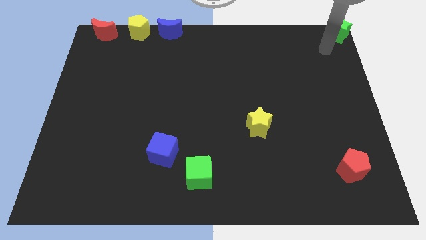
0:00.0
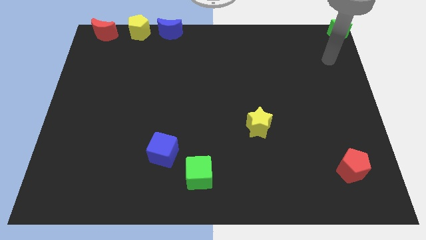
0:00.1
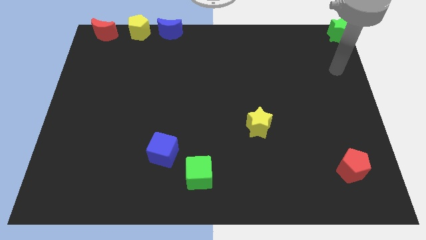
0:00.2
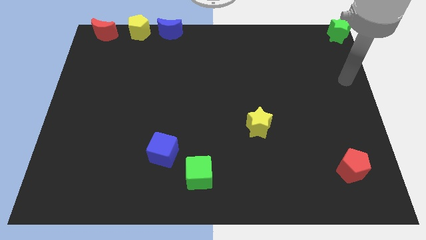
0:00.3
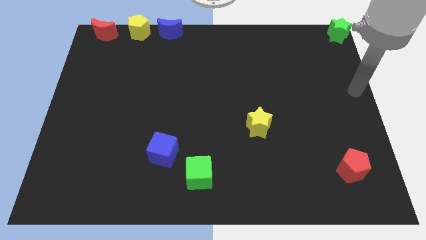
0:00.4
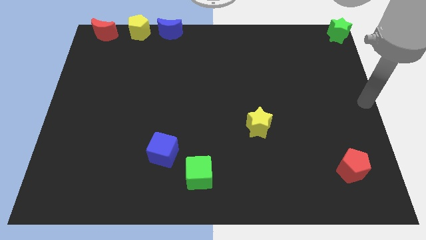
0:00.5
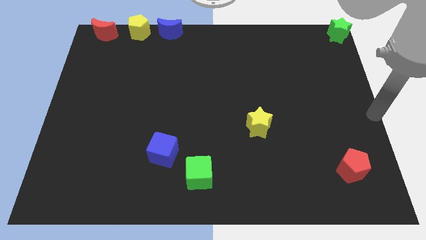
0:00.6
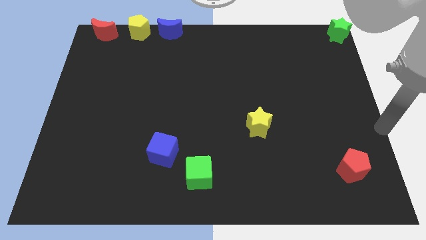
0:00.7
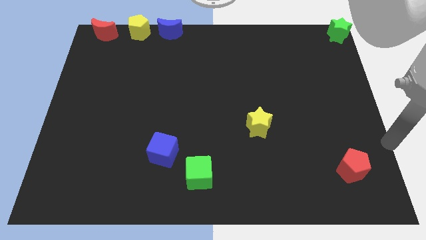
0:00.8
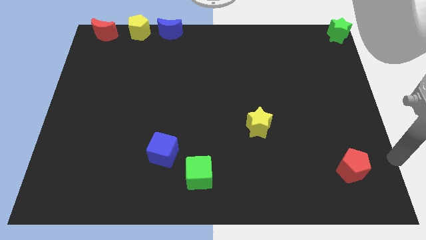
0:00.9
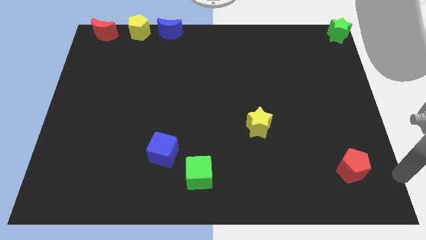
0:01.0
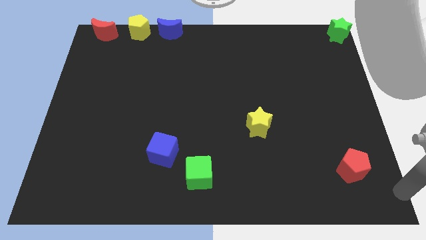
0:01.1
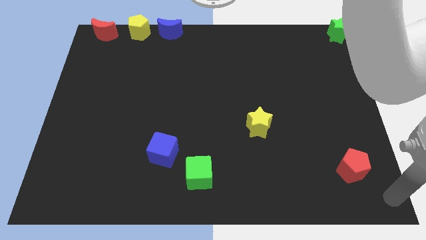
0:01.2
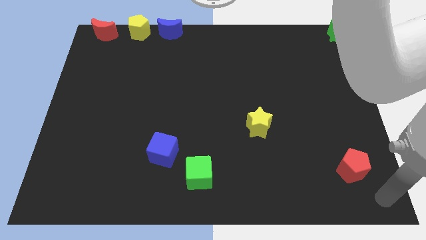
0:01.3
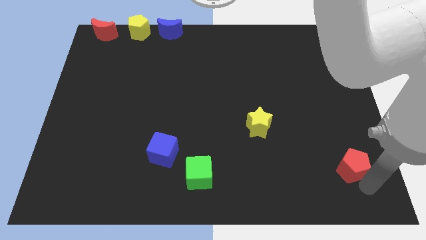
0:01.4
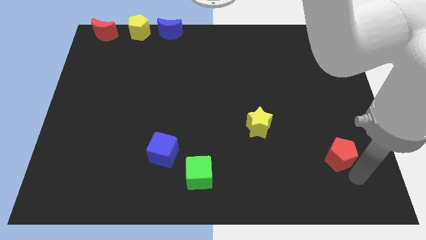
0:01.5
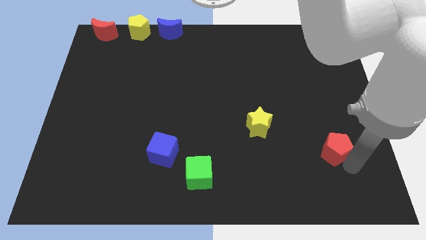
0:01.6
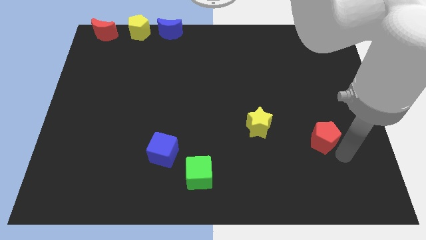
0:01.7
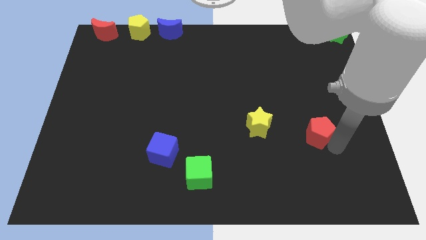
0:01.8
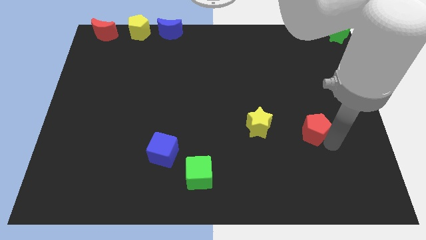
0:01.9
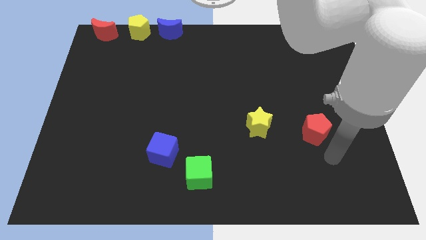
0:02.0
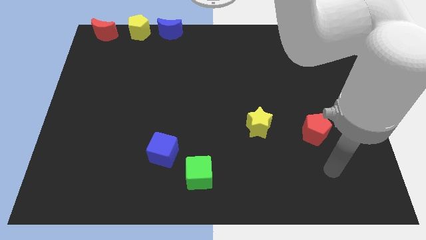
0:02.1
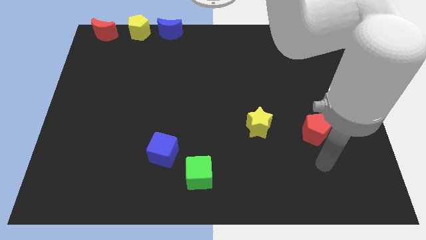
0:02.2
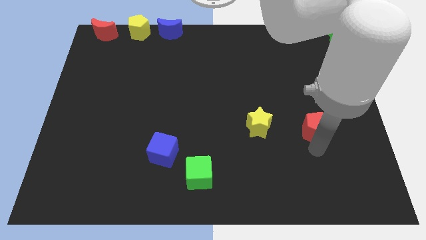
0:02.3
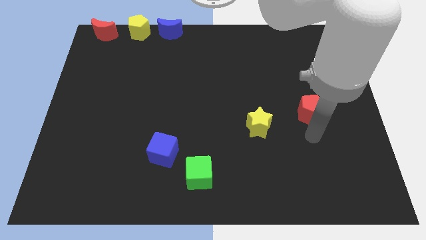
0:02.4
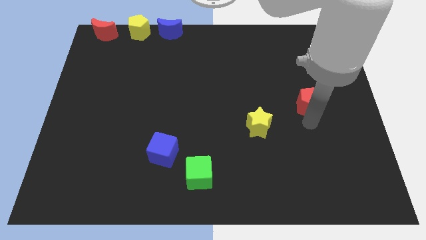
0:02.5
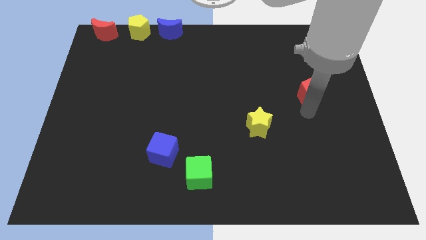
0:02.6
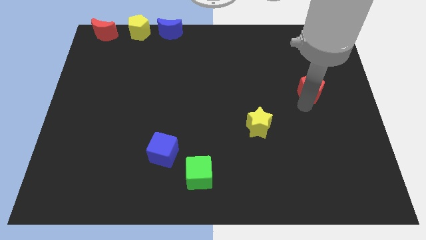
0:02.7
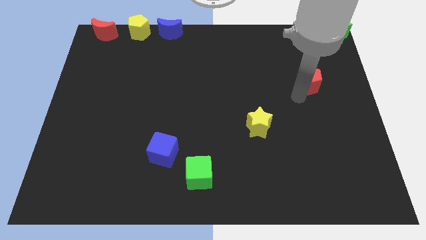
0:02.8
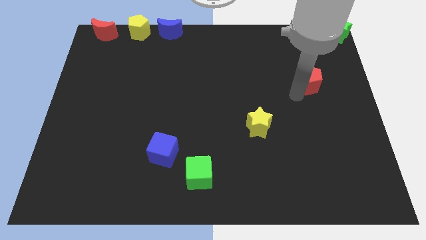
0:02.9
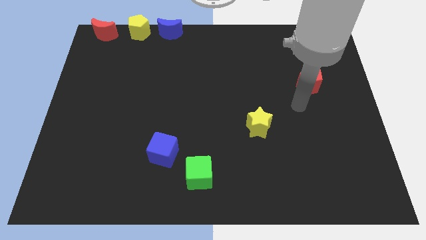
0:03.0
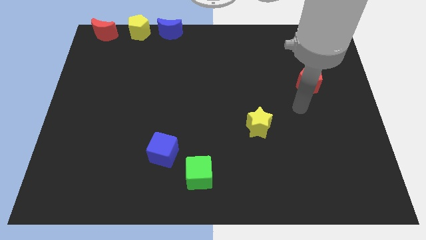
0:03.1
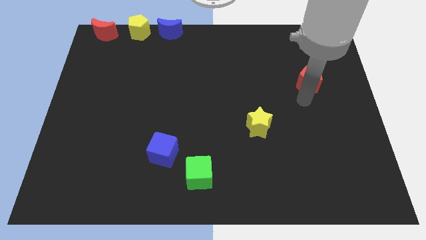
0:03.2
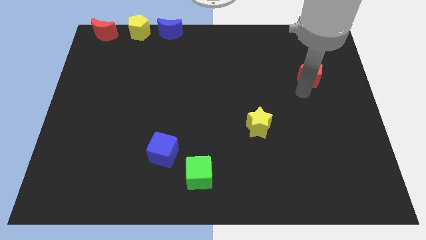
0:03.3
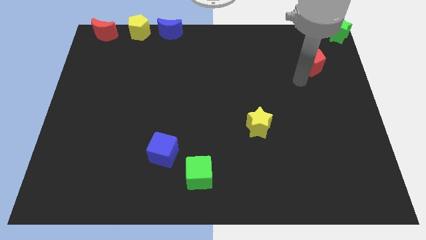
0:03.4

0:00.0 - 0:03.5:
move the red pentagon diagonally in between the green star and yellow star

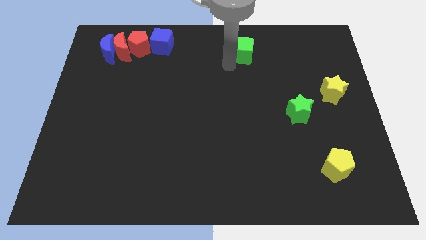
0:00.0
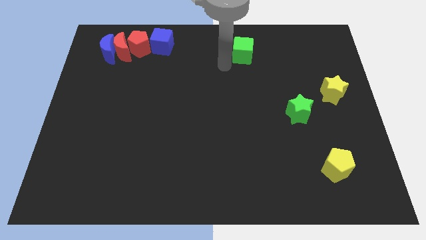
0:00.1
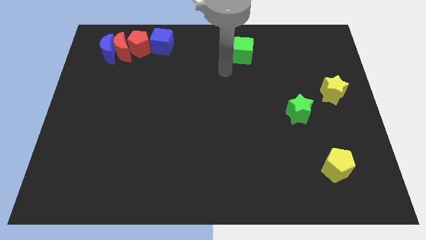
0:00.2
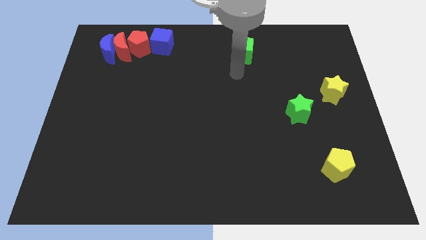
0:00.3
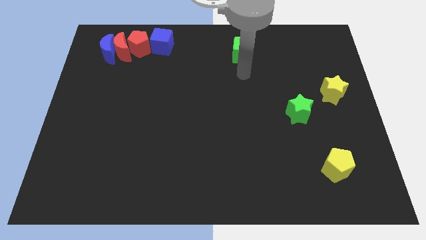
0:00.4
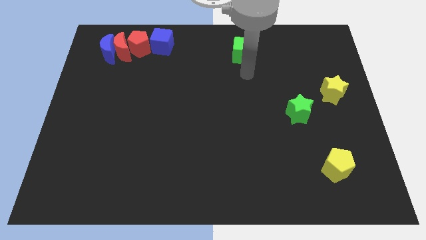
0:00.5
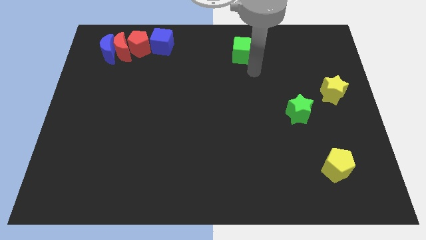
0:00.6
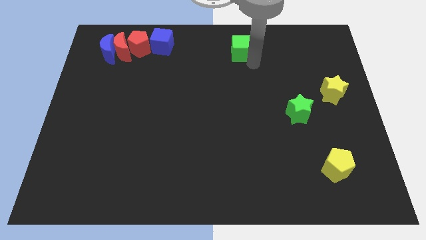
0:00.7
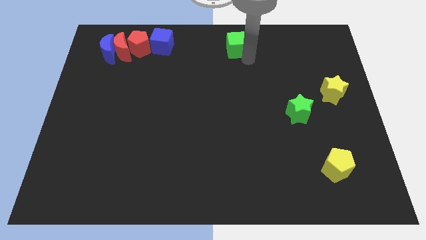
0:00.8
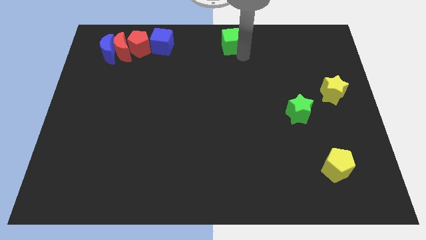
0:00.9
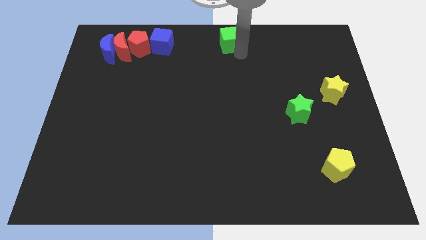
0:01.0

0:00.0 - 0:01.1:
move green cube to the center top

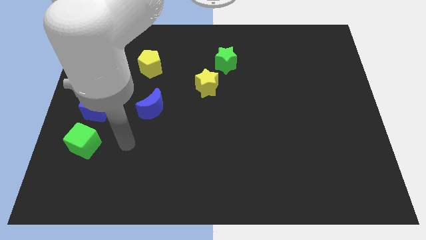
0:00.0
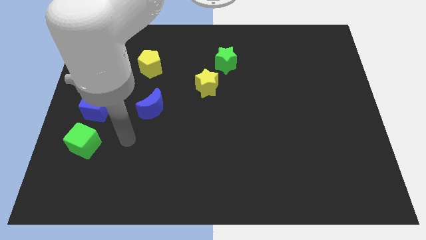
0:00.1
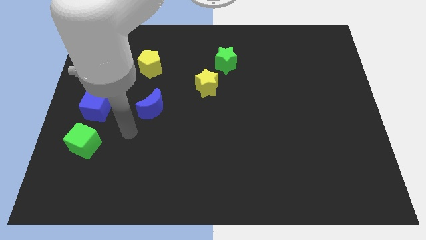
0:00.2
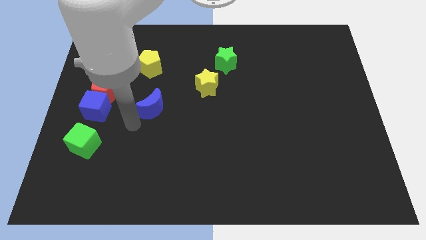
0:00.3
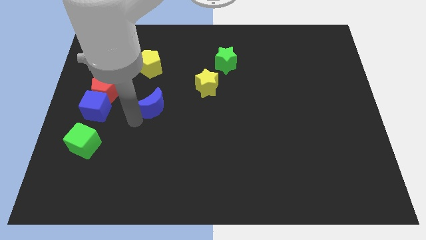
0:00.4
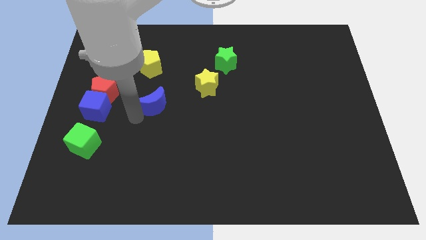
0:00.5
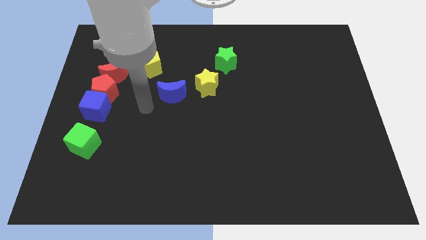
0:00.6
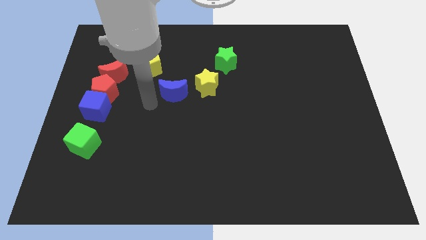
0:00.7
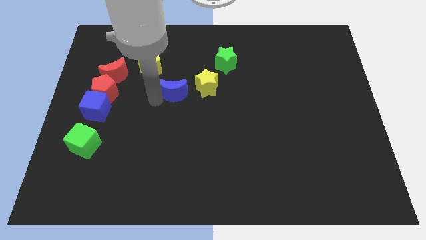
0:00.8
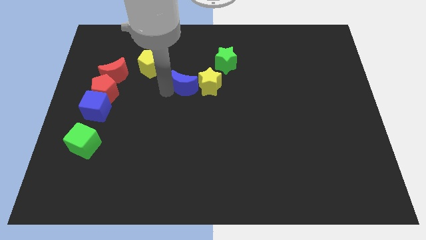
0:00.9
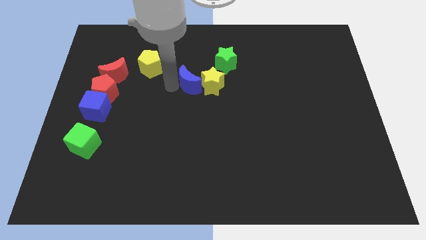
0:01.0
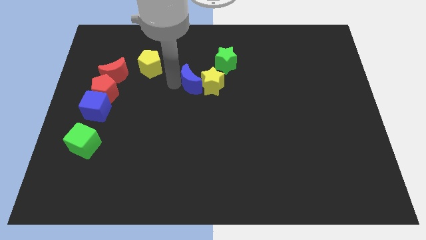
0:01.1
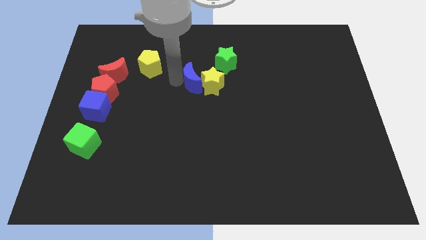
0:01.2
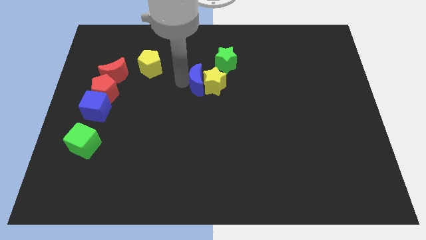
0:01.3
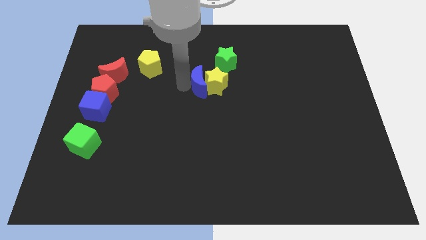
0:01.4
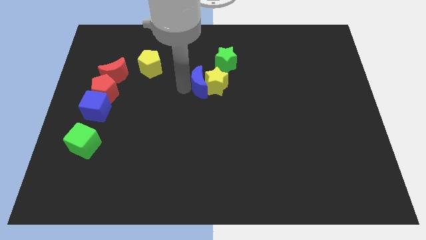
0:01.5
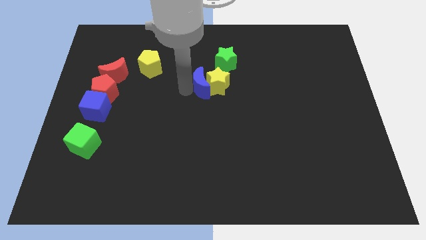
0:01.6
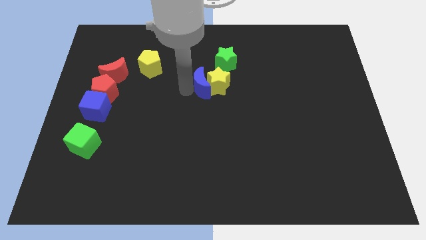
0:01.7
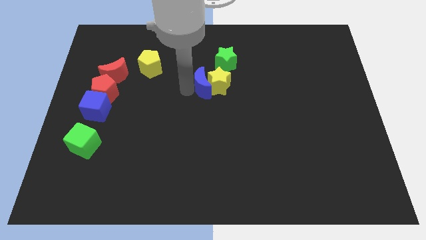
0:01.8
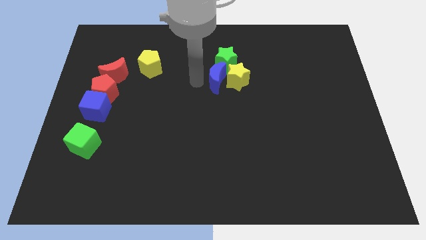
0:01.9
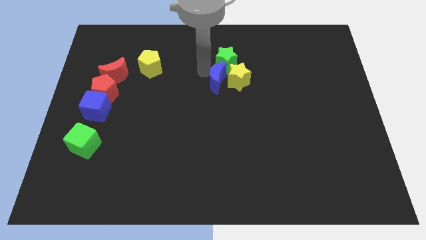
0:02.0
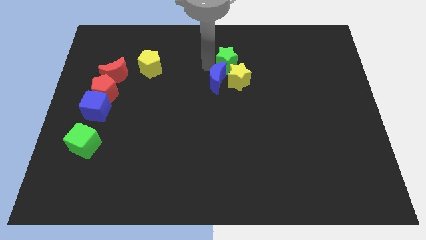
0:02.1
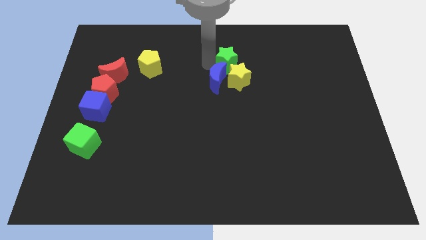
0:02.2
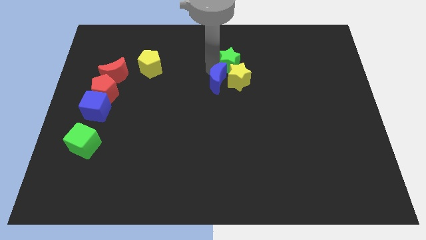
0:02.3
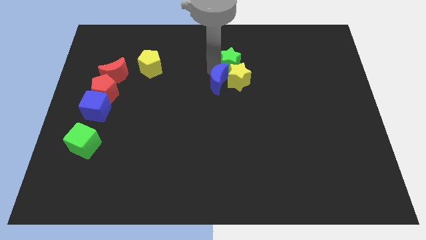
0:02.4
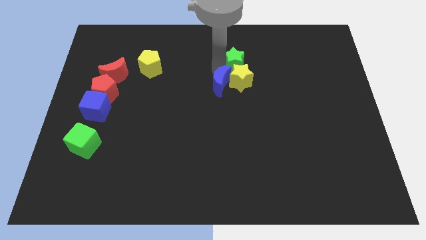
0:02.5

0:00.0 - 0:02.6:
push the blue crescent along with the yellow star towards the green star

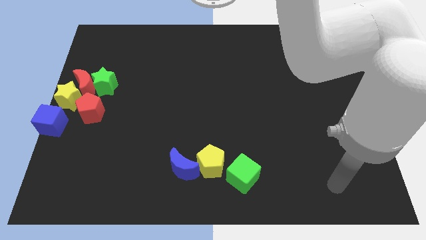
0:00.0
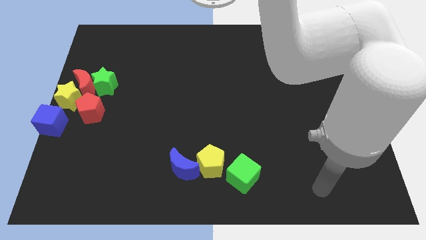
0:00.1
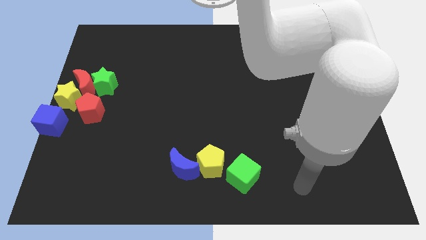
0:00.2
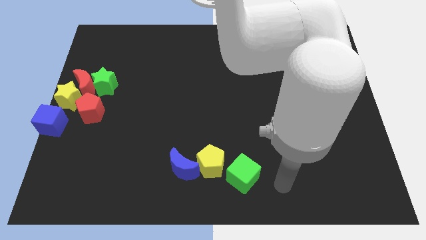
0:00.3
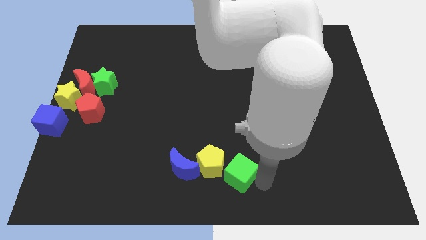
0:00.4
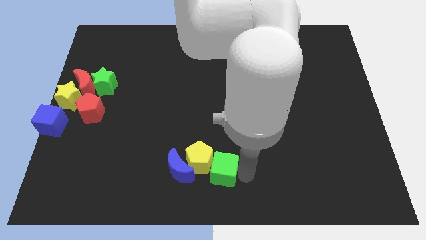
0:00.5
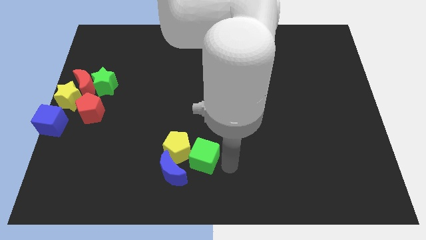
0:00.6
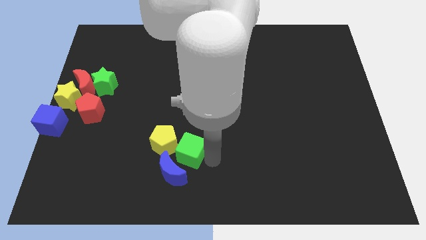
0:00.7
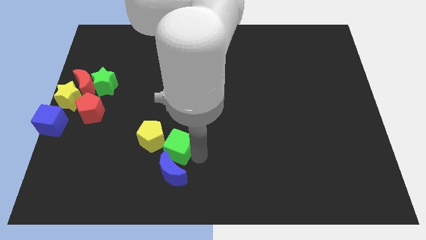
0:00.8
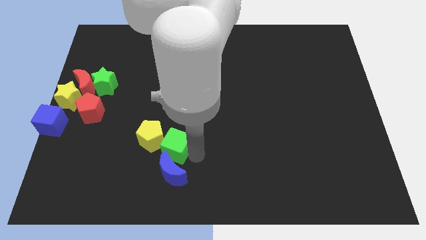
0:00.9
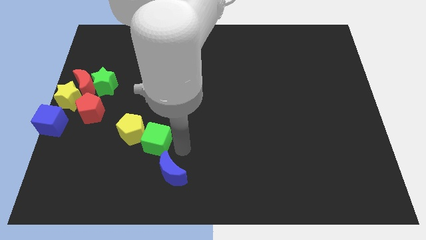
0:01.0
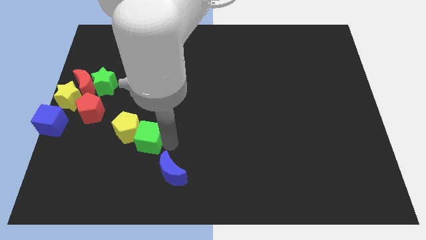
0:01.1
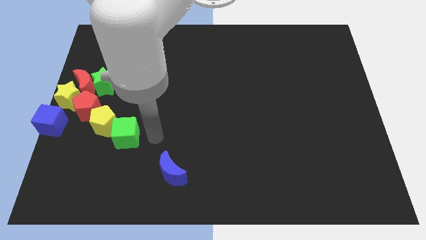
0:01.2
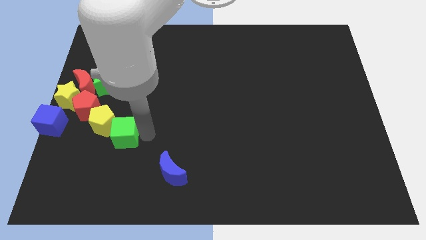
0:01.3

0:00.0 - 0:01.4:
move the green cube and yellow pentagon into the right side of the red pentagon

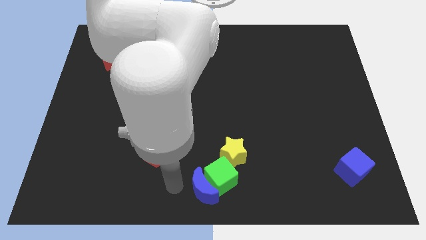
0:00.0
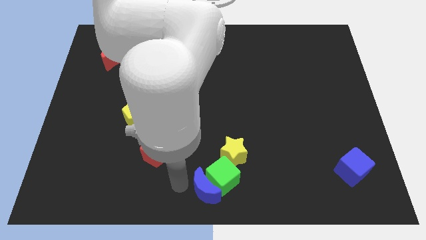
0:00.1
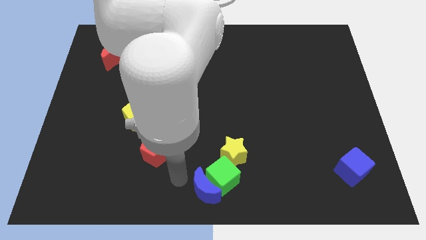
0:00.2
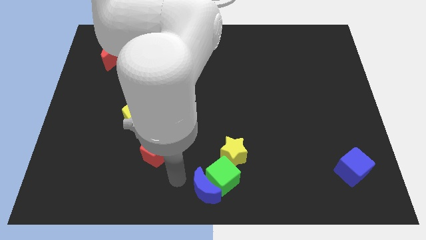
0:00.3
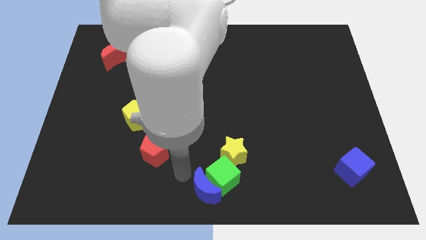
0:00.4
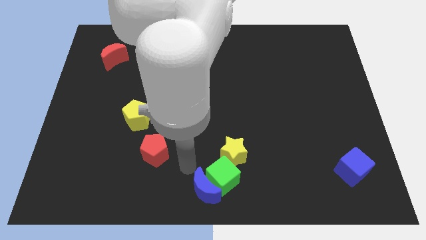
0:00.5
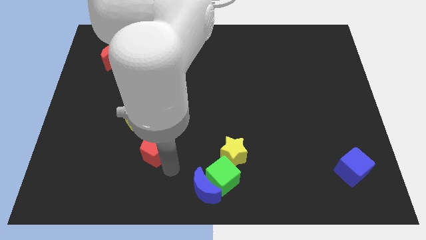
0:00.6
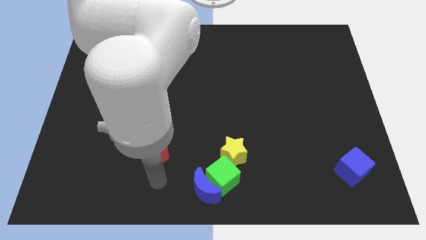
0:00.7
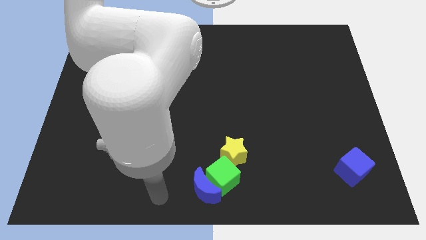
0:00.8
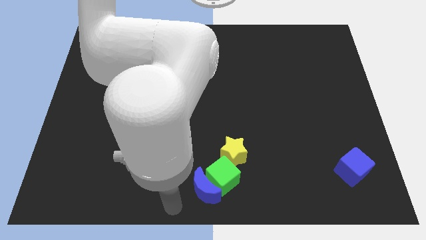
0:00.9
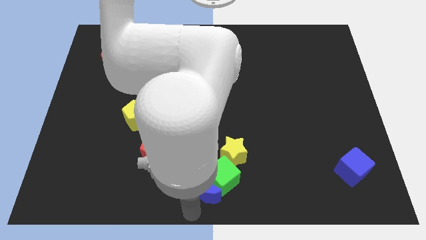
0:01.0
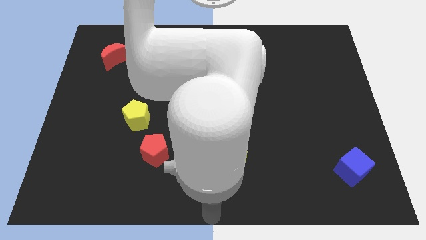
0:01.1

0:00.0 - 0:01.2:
put your arm at the bottom center of the board
